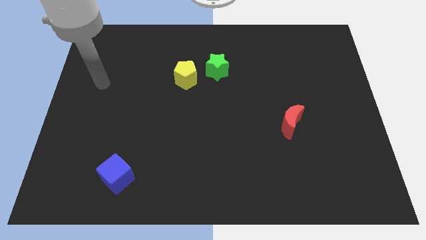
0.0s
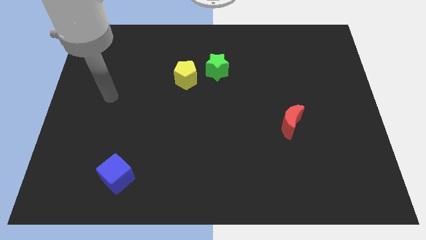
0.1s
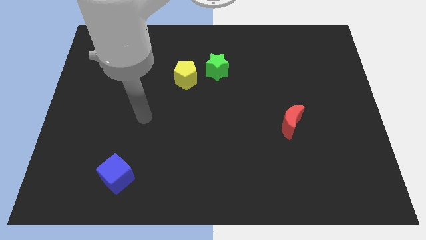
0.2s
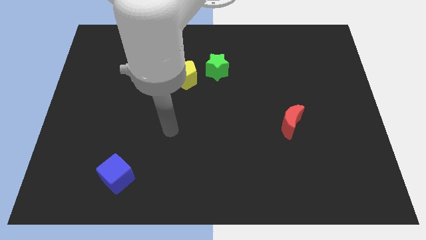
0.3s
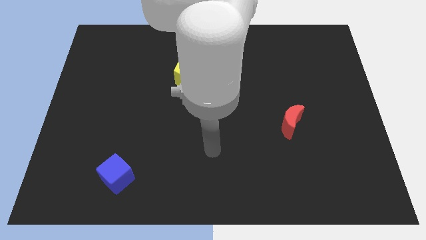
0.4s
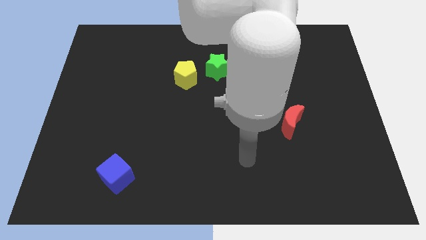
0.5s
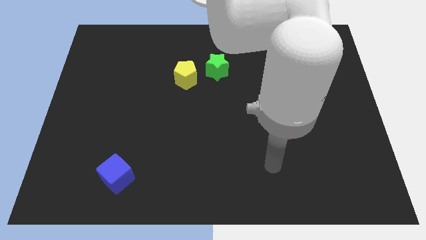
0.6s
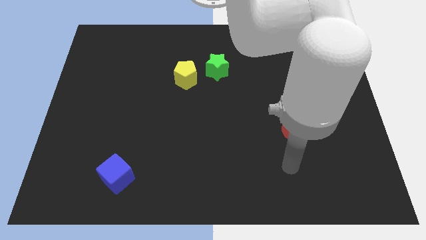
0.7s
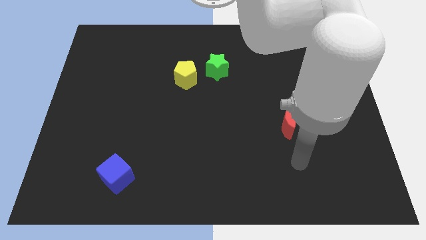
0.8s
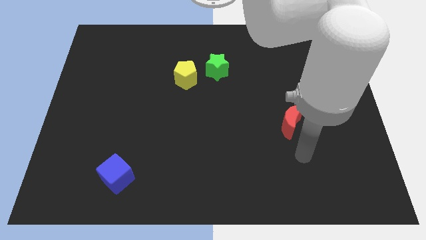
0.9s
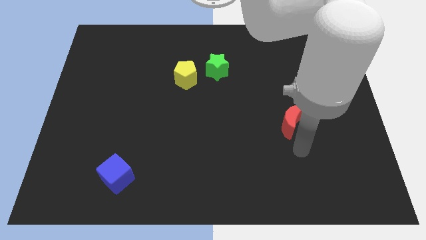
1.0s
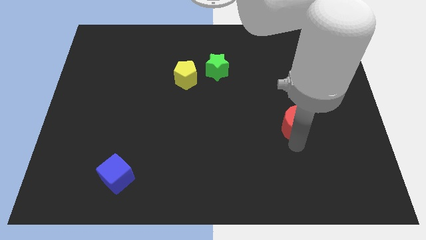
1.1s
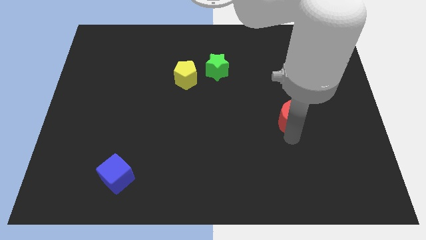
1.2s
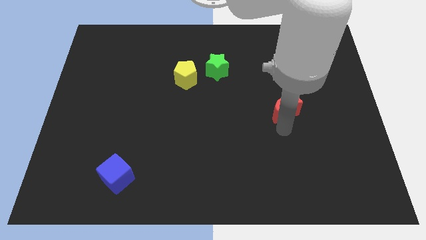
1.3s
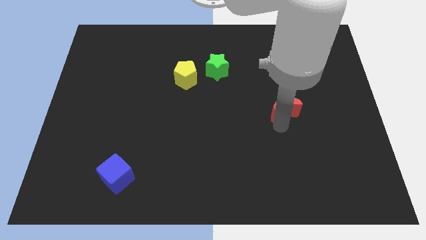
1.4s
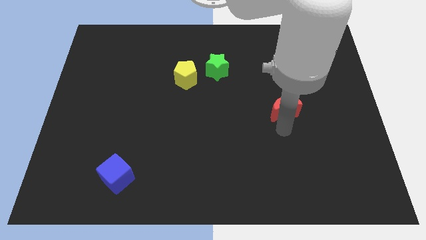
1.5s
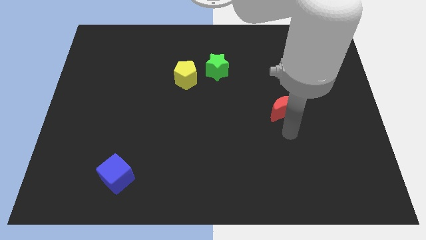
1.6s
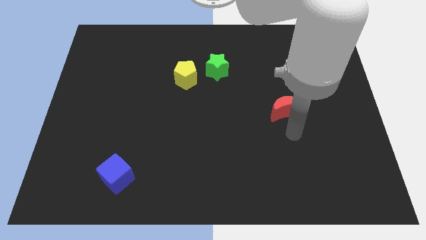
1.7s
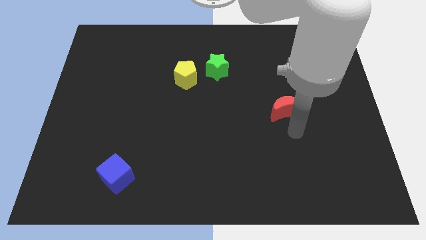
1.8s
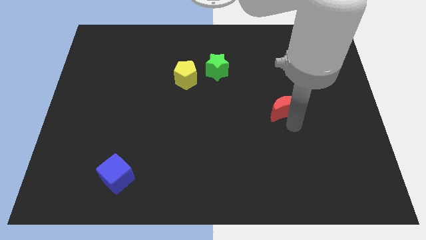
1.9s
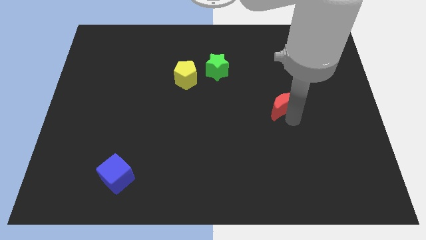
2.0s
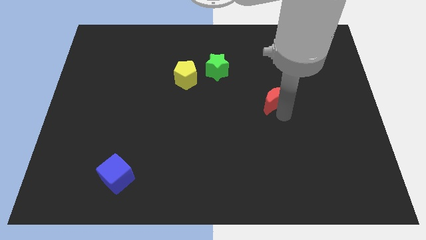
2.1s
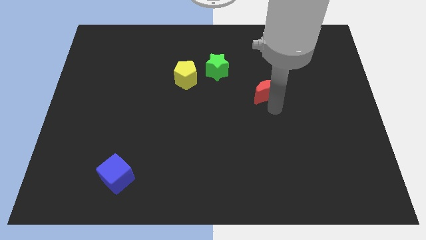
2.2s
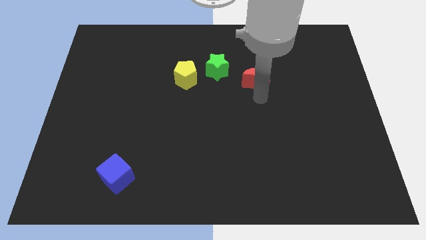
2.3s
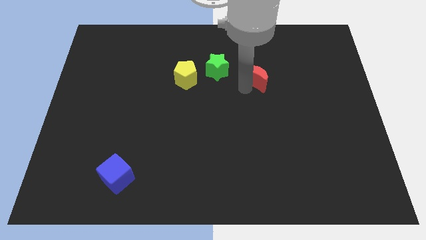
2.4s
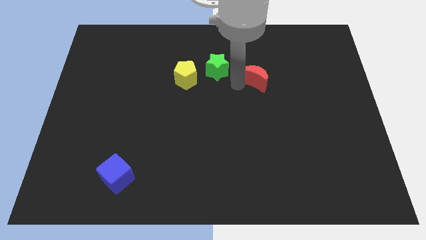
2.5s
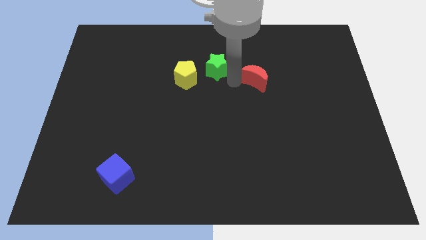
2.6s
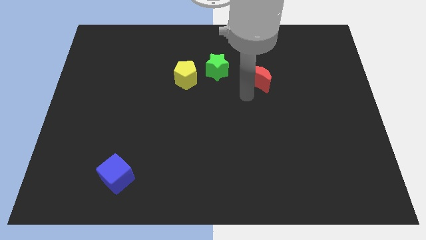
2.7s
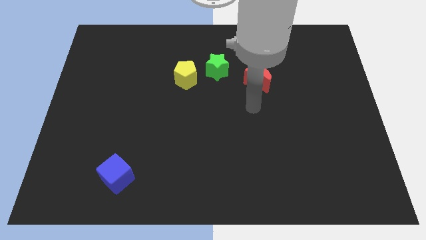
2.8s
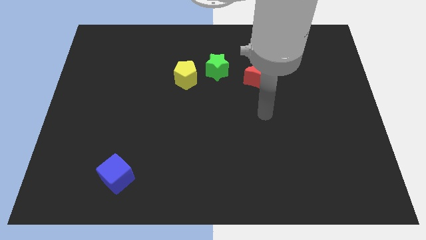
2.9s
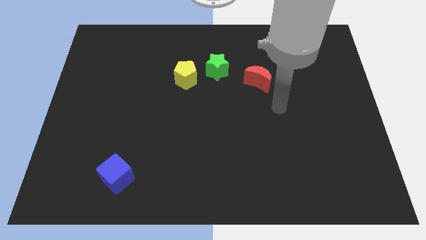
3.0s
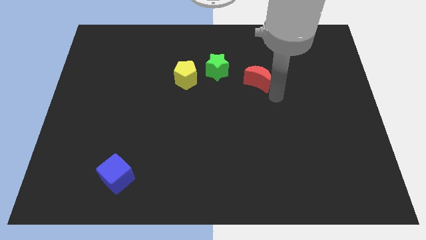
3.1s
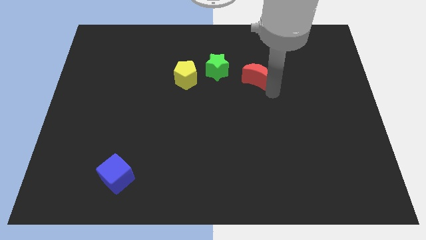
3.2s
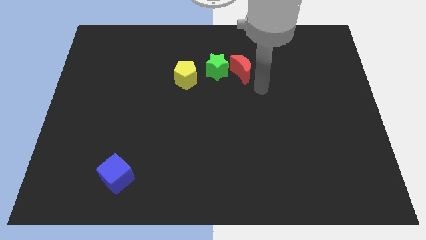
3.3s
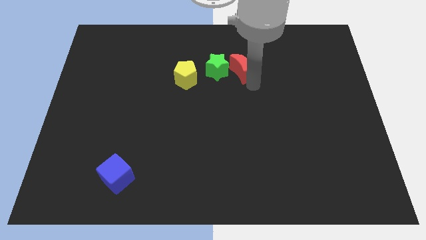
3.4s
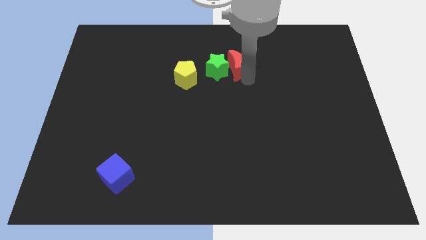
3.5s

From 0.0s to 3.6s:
move the red moon close to the green block

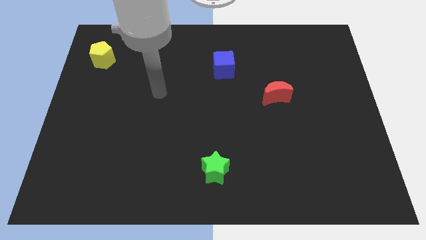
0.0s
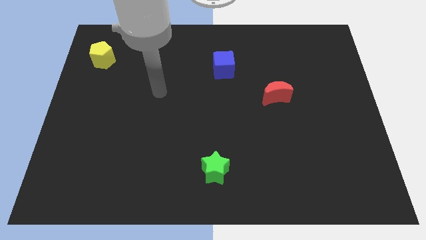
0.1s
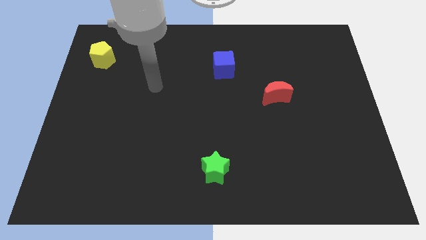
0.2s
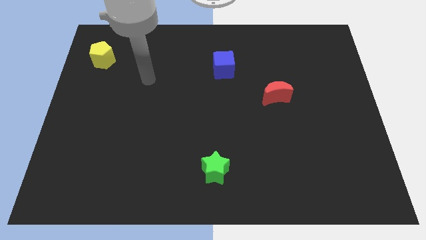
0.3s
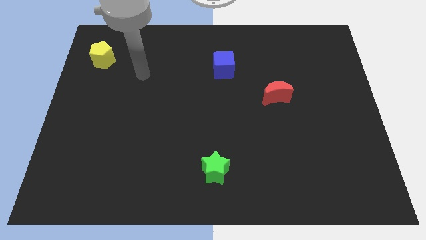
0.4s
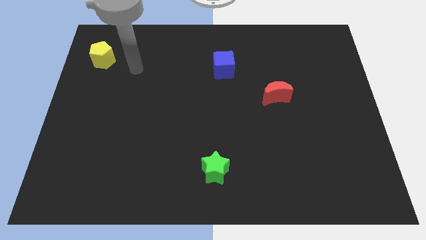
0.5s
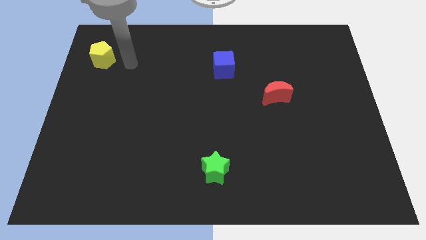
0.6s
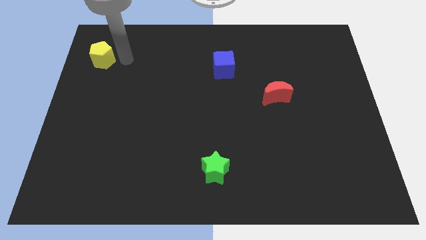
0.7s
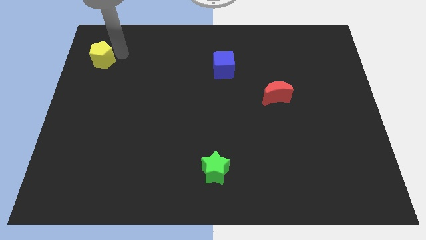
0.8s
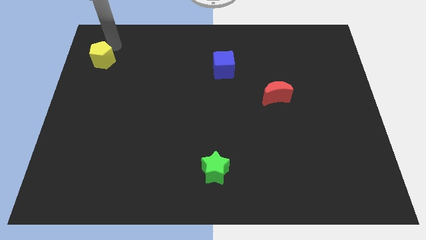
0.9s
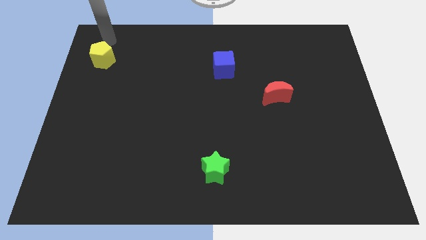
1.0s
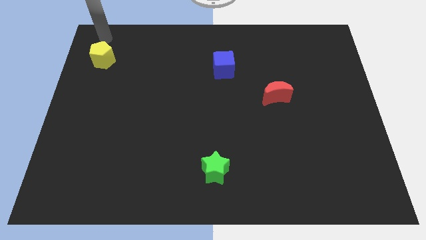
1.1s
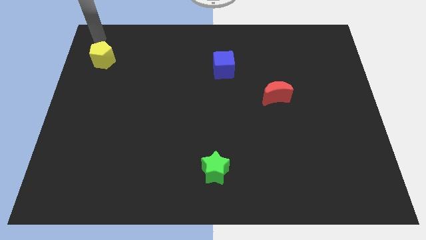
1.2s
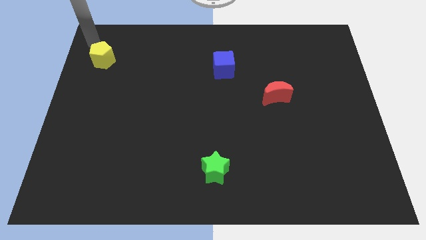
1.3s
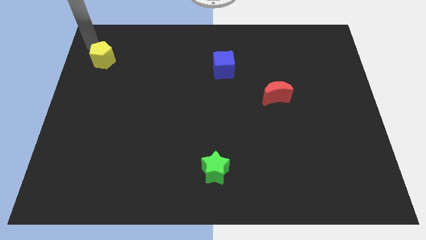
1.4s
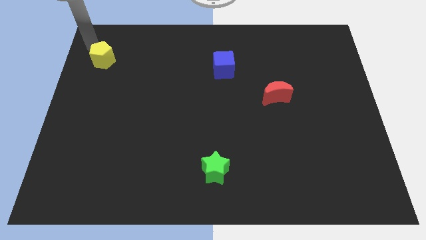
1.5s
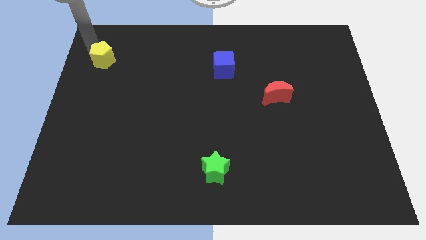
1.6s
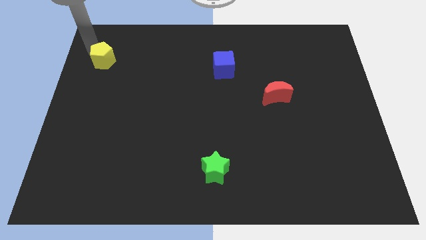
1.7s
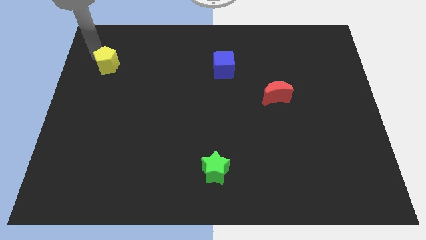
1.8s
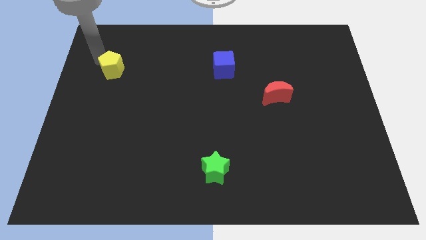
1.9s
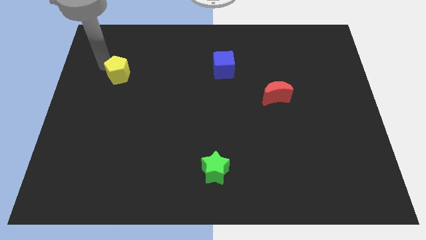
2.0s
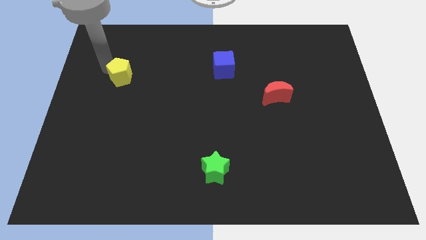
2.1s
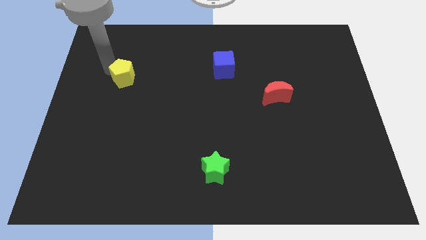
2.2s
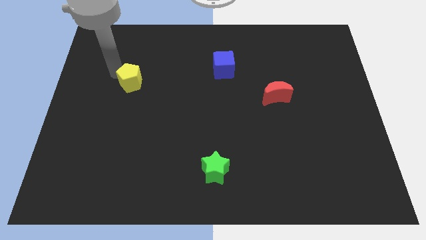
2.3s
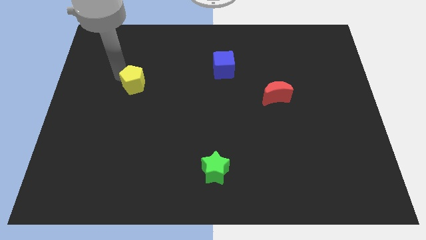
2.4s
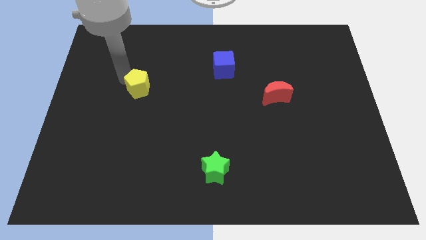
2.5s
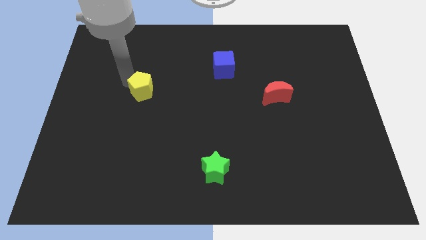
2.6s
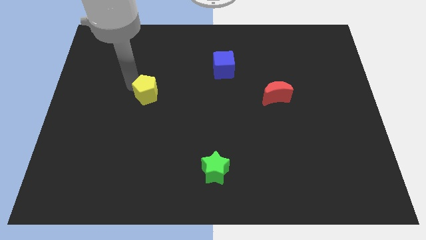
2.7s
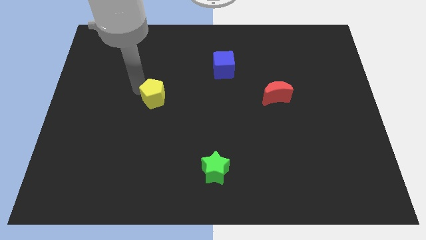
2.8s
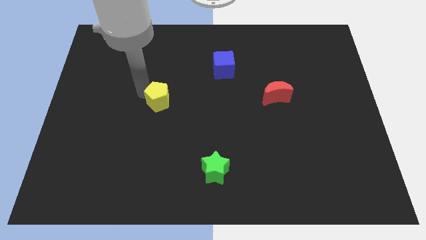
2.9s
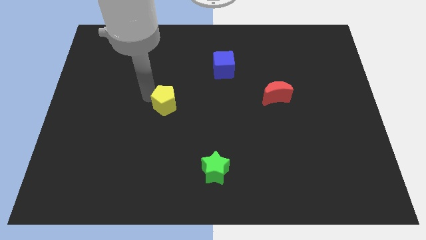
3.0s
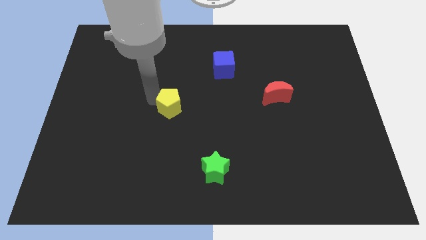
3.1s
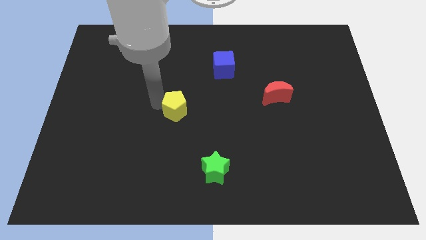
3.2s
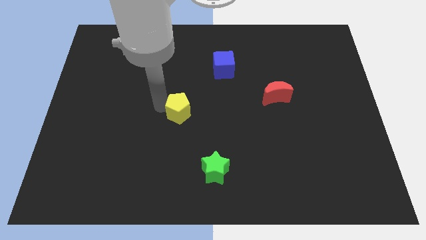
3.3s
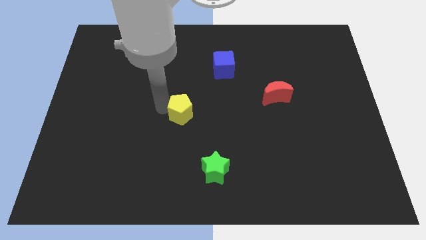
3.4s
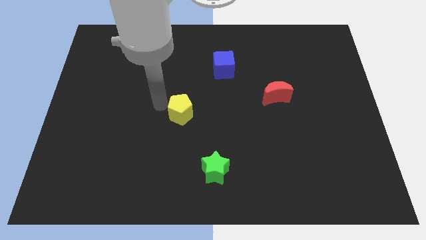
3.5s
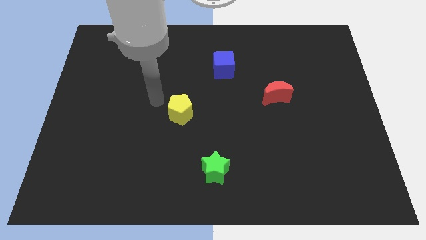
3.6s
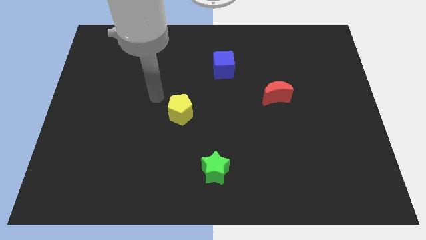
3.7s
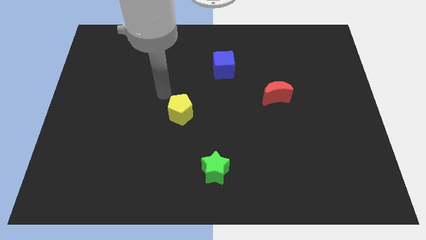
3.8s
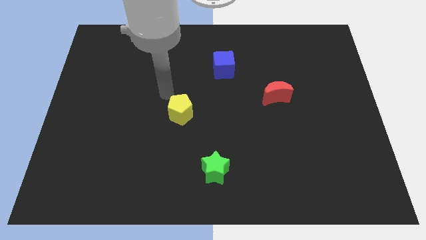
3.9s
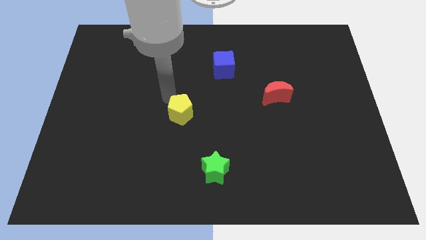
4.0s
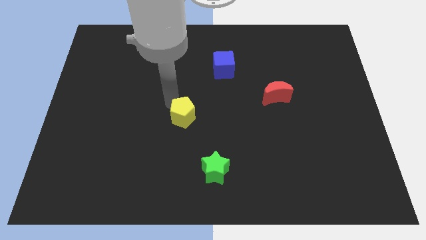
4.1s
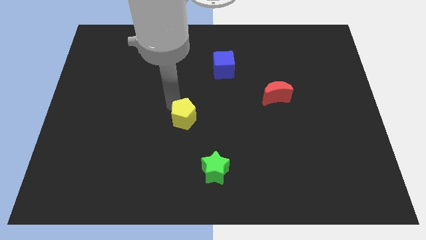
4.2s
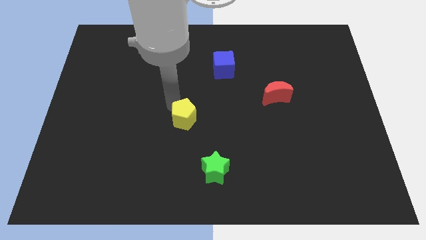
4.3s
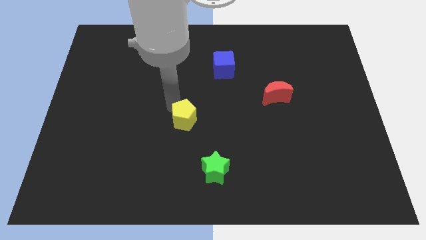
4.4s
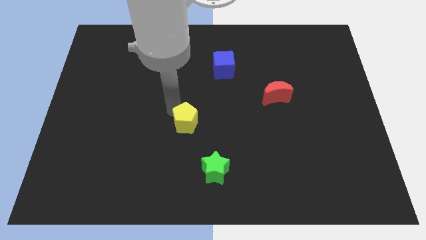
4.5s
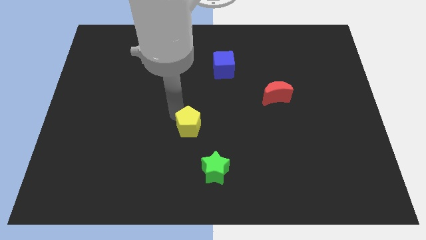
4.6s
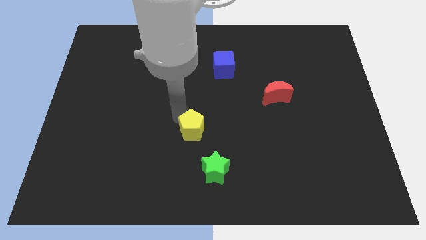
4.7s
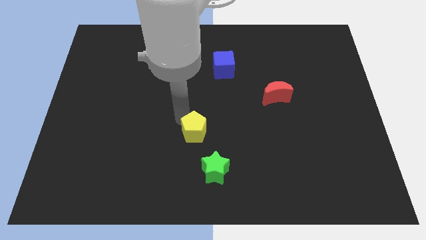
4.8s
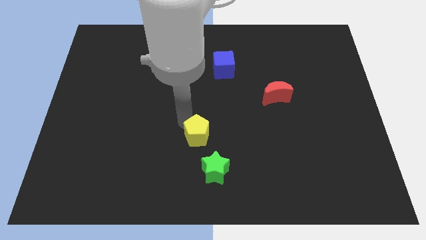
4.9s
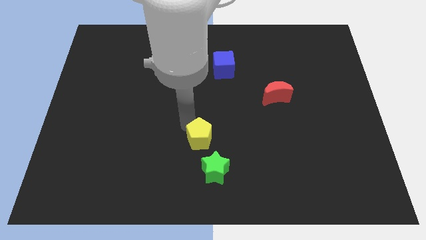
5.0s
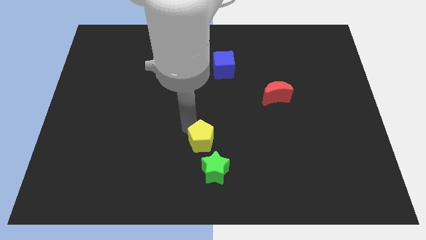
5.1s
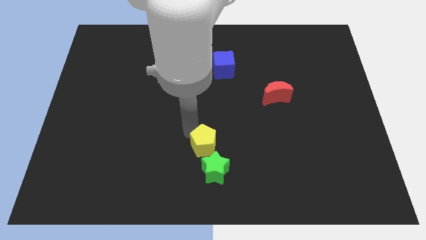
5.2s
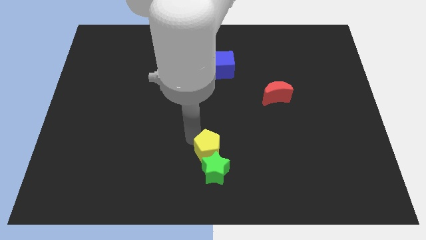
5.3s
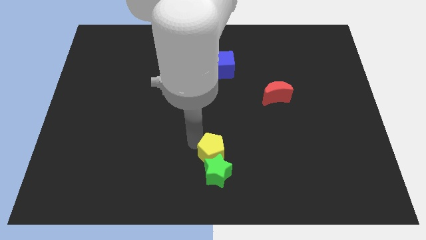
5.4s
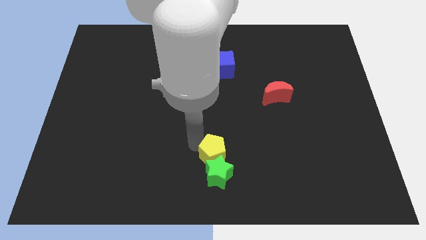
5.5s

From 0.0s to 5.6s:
slide the yellow pentagon next to the green star
